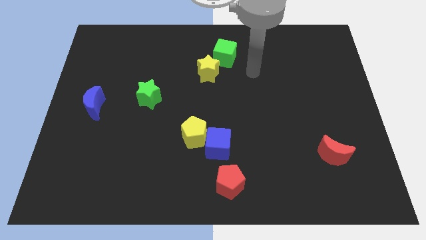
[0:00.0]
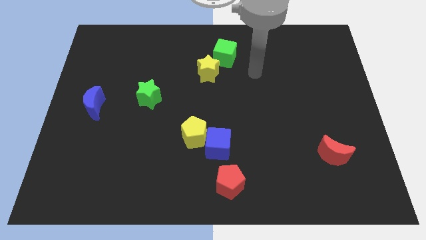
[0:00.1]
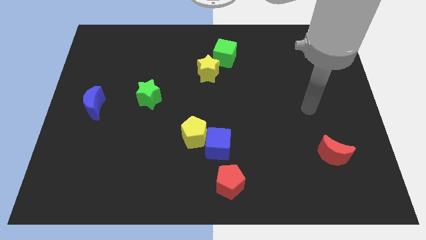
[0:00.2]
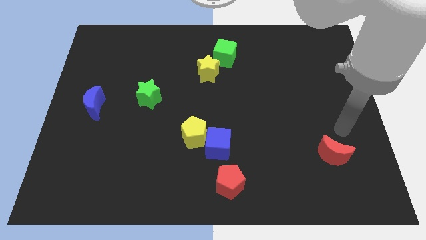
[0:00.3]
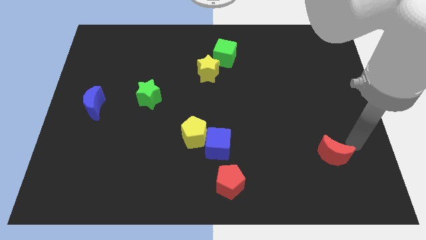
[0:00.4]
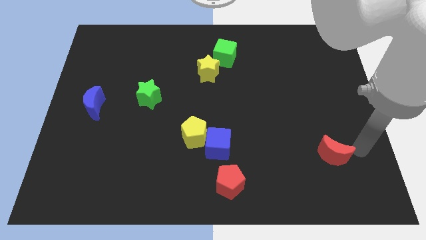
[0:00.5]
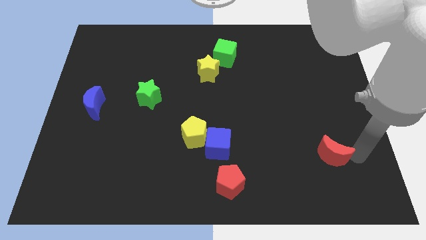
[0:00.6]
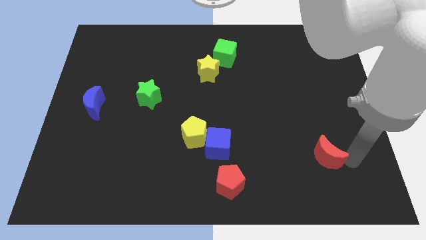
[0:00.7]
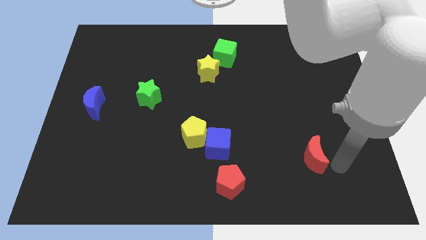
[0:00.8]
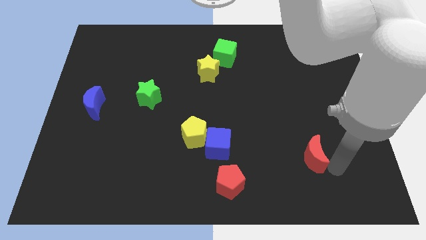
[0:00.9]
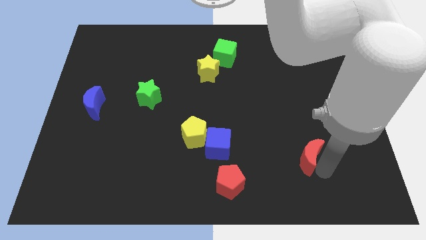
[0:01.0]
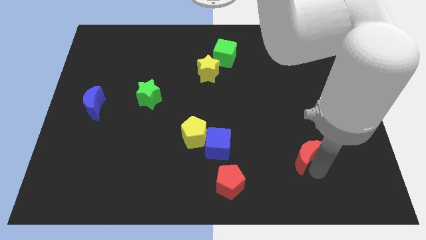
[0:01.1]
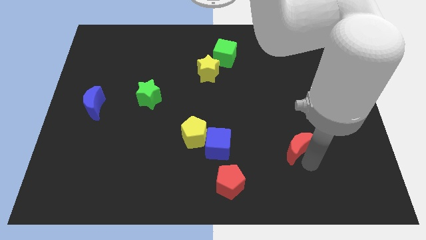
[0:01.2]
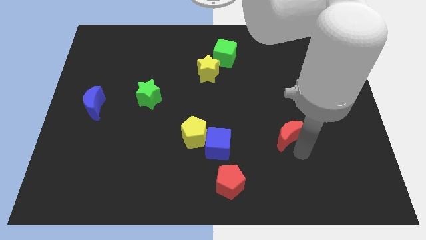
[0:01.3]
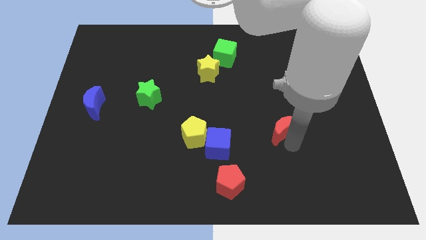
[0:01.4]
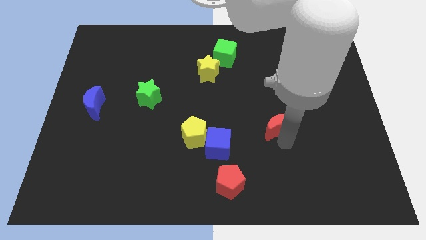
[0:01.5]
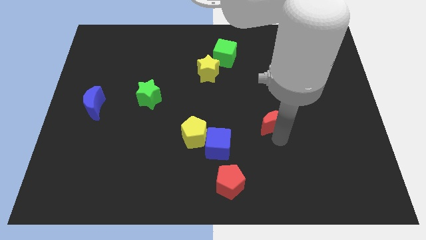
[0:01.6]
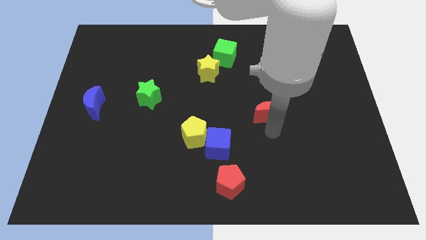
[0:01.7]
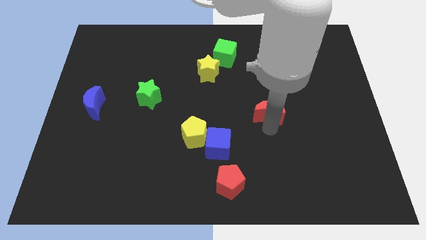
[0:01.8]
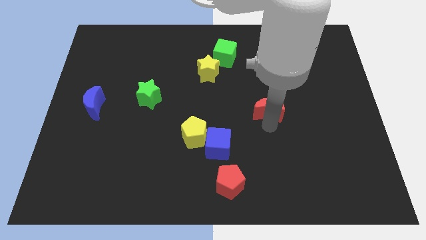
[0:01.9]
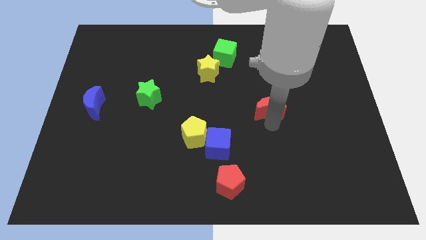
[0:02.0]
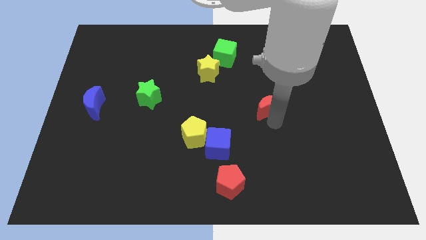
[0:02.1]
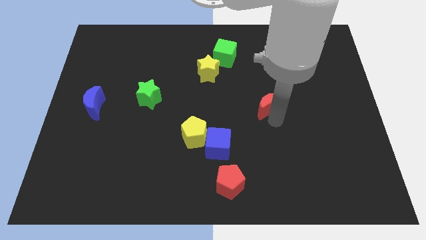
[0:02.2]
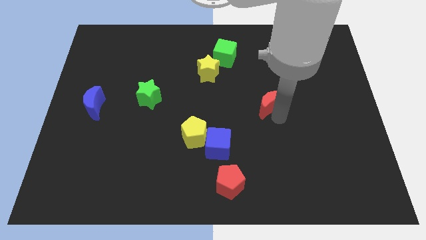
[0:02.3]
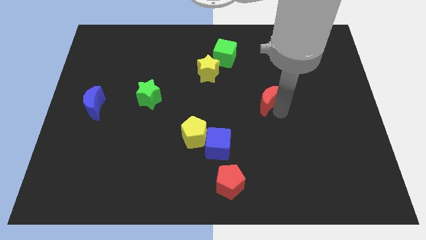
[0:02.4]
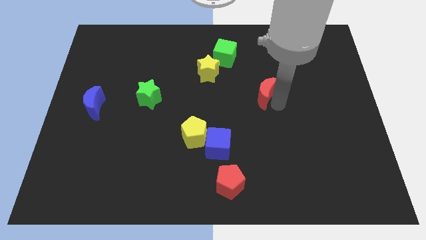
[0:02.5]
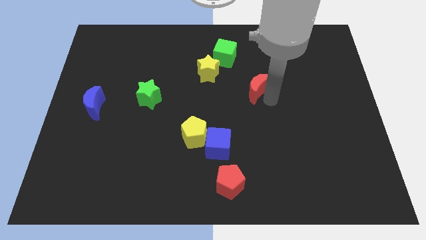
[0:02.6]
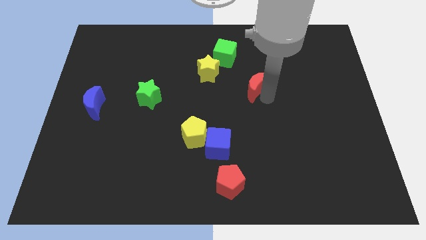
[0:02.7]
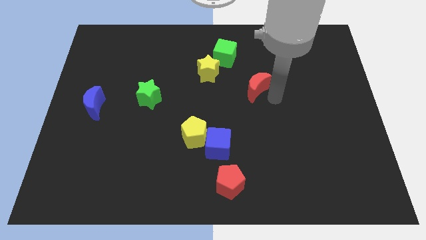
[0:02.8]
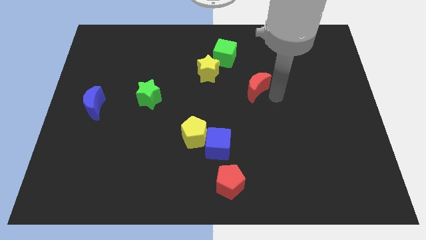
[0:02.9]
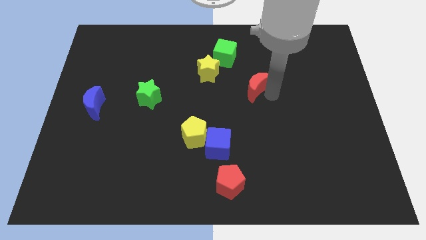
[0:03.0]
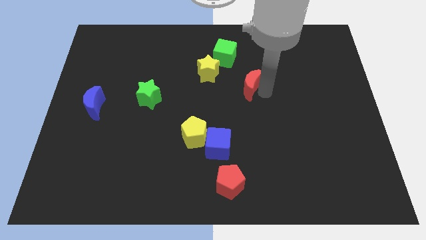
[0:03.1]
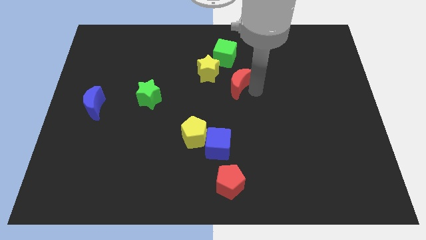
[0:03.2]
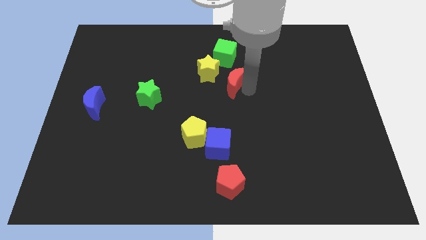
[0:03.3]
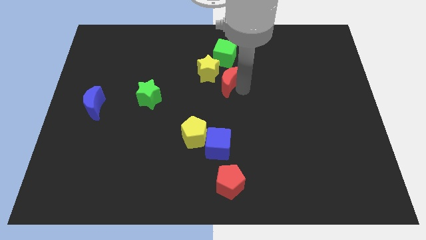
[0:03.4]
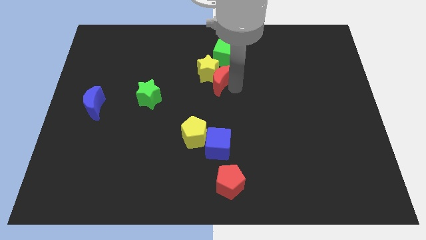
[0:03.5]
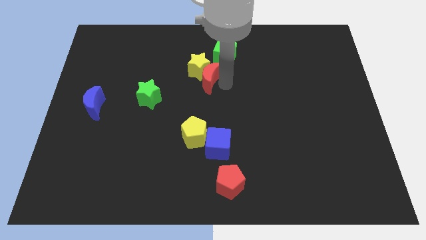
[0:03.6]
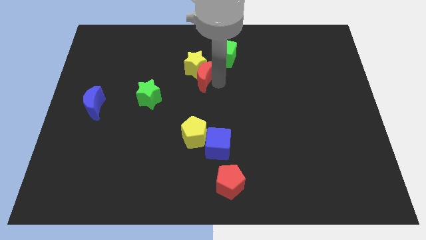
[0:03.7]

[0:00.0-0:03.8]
put the red moon towards the yellow star

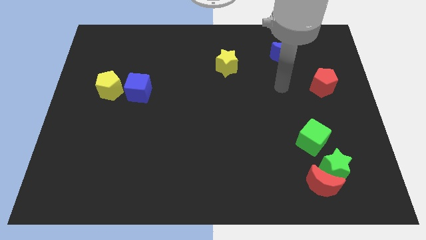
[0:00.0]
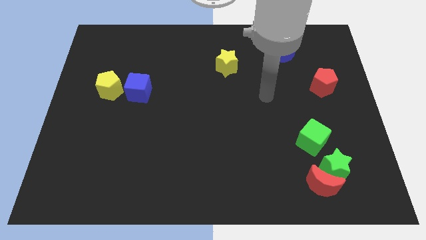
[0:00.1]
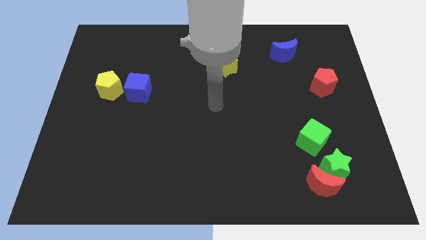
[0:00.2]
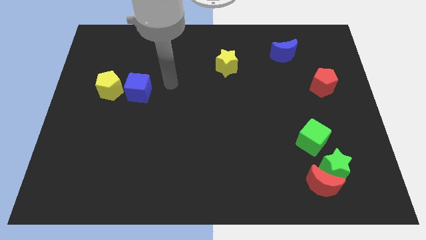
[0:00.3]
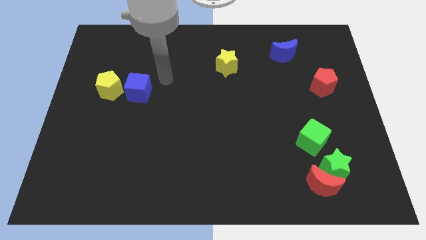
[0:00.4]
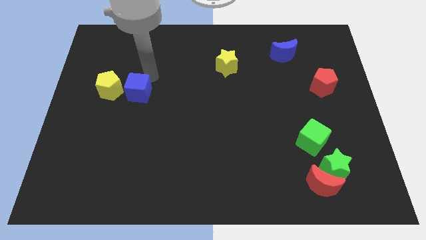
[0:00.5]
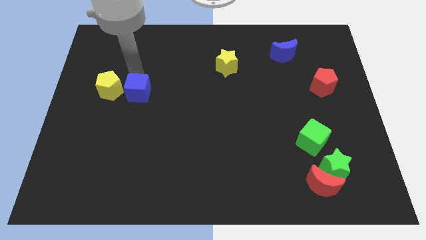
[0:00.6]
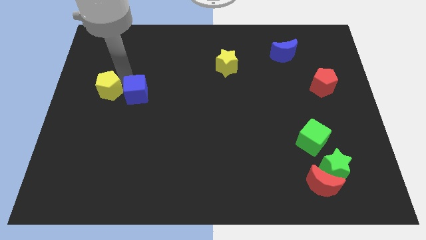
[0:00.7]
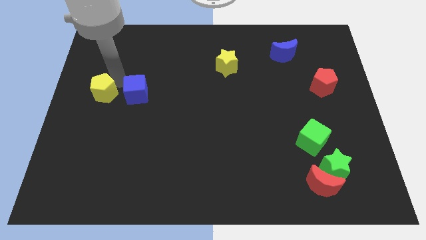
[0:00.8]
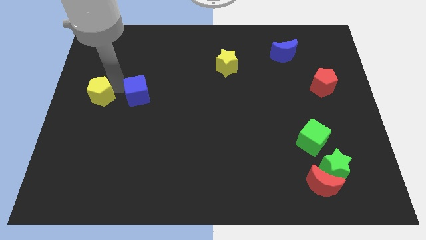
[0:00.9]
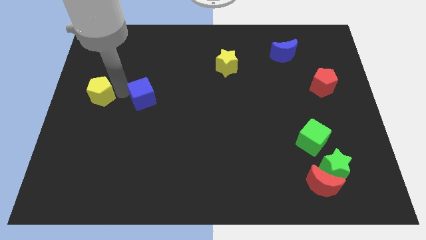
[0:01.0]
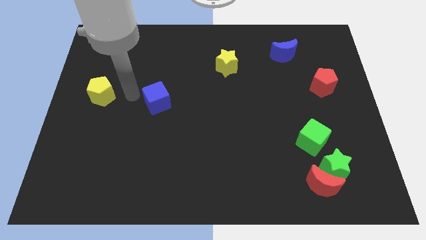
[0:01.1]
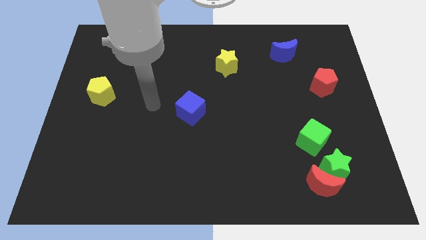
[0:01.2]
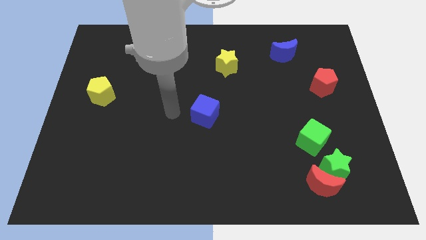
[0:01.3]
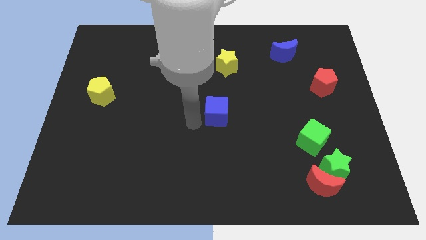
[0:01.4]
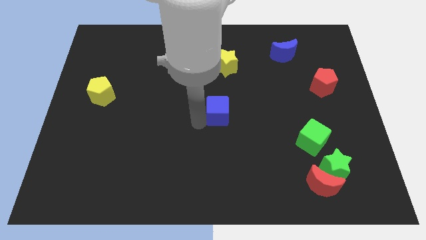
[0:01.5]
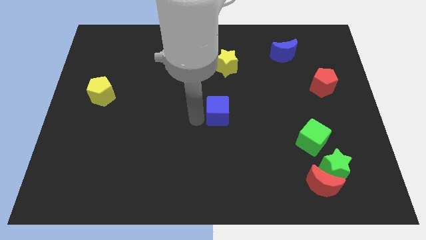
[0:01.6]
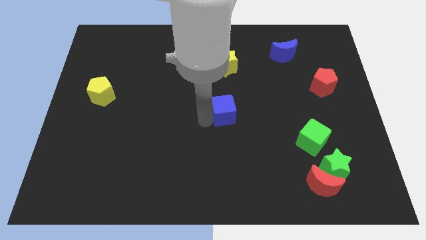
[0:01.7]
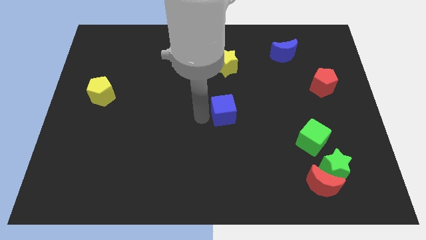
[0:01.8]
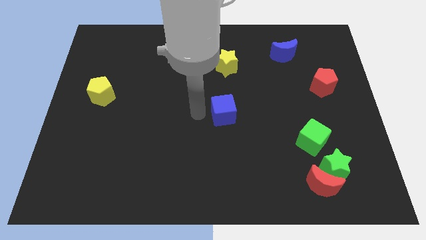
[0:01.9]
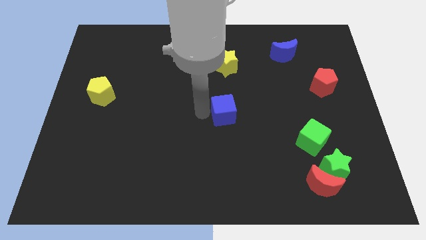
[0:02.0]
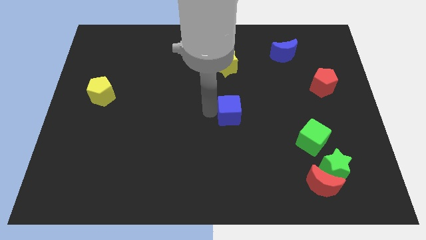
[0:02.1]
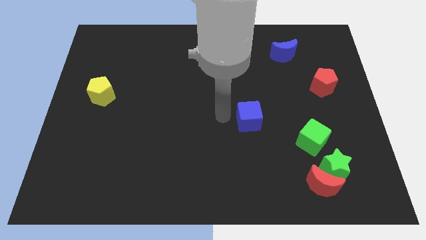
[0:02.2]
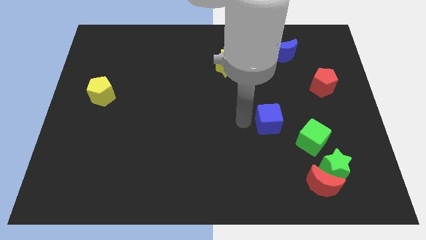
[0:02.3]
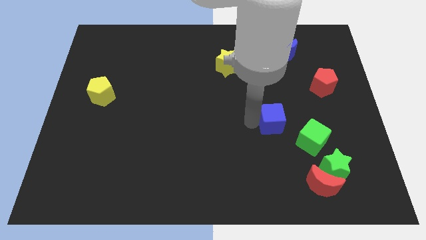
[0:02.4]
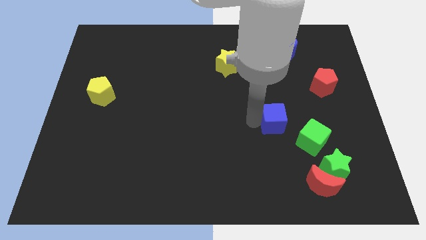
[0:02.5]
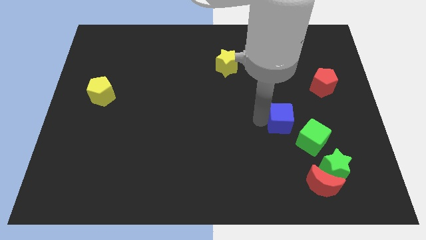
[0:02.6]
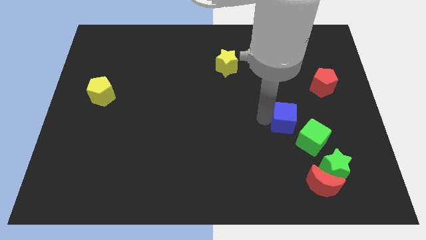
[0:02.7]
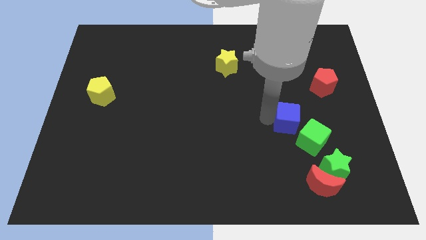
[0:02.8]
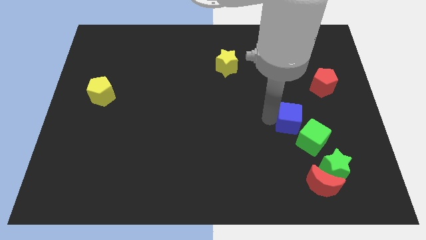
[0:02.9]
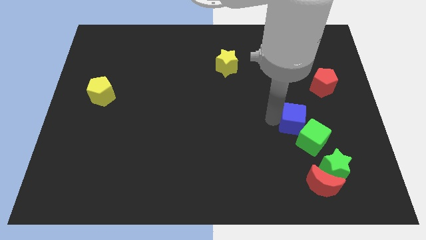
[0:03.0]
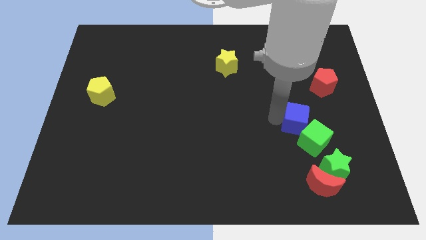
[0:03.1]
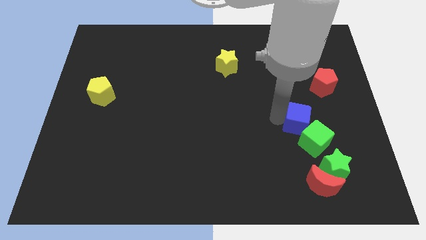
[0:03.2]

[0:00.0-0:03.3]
move the blue cube to the green cube

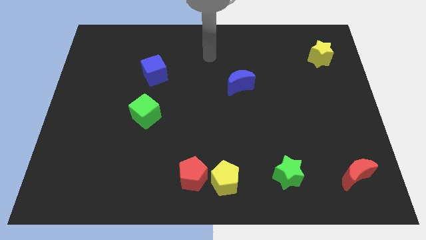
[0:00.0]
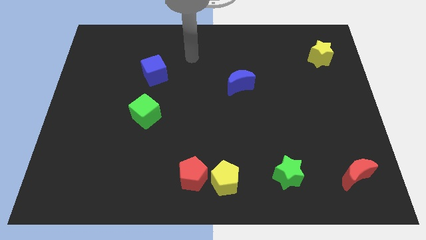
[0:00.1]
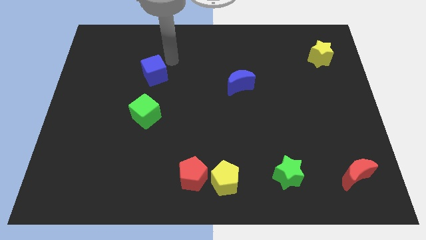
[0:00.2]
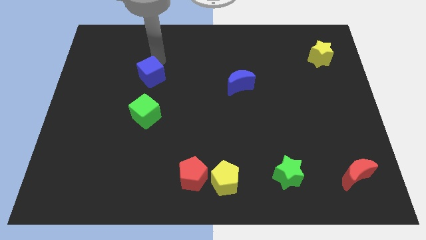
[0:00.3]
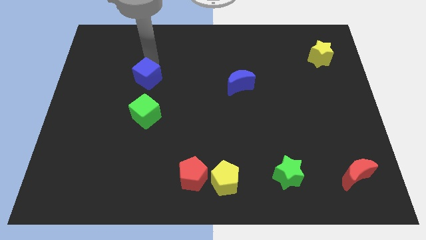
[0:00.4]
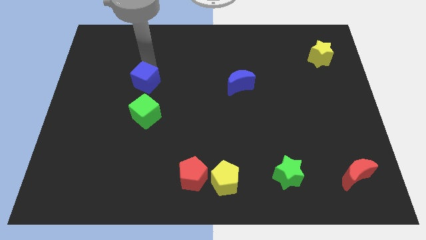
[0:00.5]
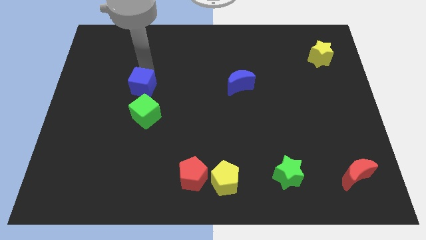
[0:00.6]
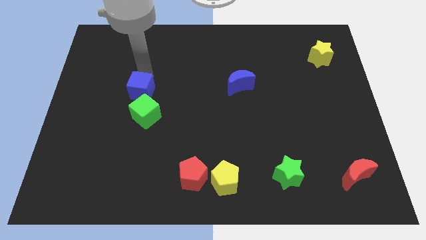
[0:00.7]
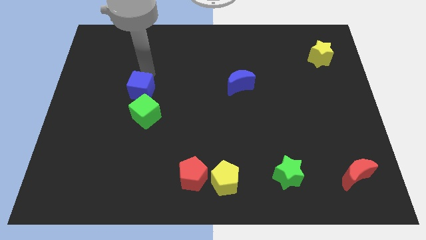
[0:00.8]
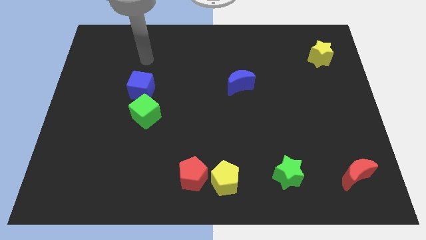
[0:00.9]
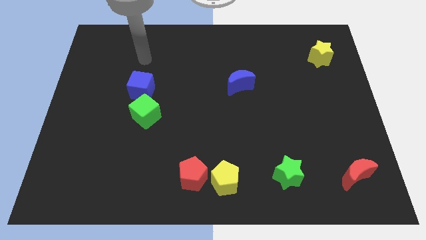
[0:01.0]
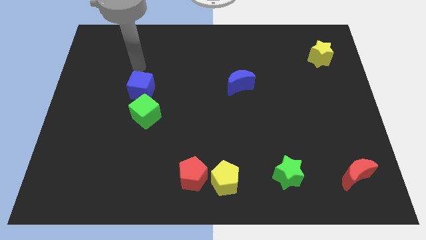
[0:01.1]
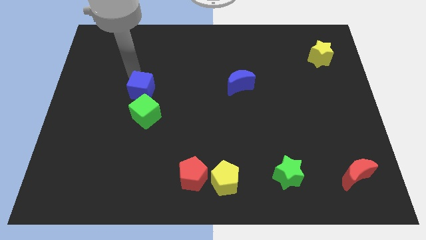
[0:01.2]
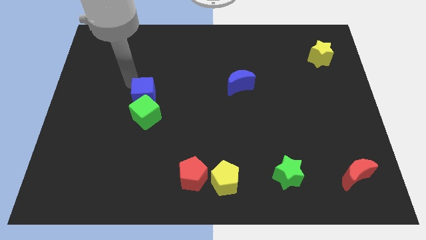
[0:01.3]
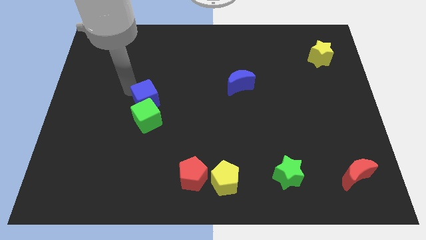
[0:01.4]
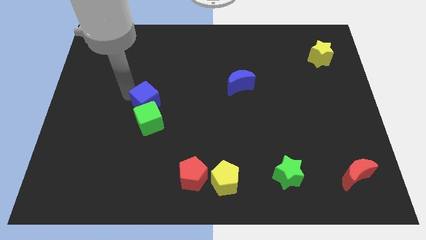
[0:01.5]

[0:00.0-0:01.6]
put the blue cube towards the green cube
